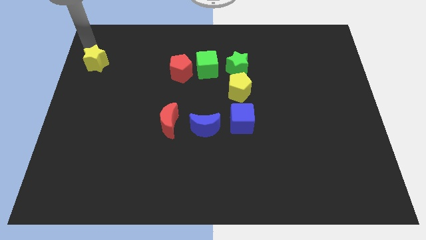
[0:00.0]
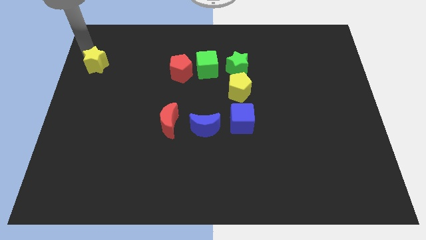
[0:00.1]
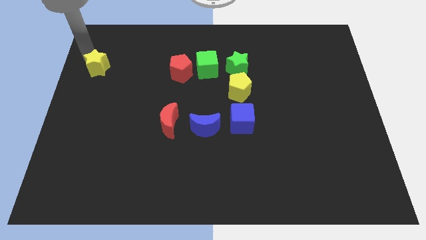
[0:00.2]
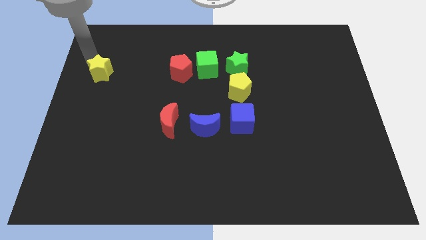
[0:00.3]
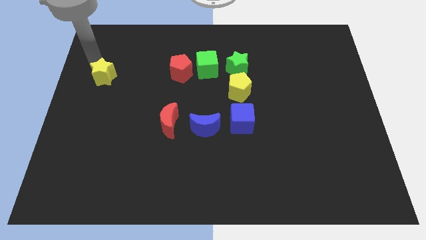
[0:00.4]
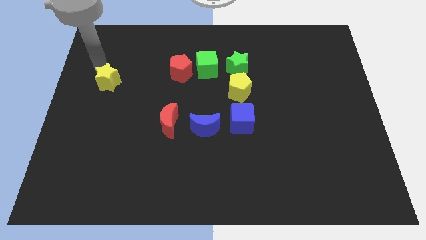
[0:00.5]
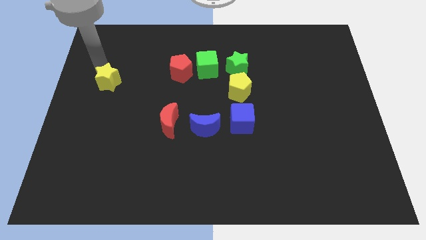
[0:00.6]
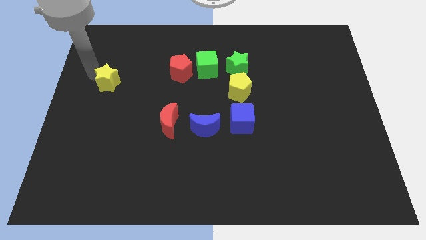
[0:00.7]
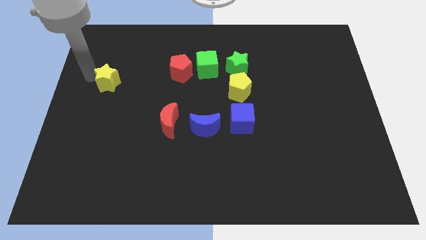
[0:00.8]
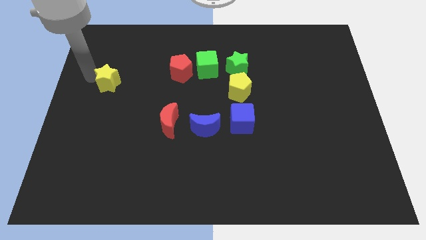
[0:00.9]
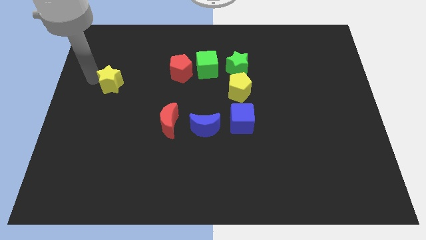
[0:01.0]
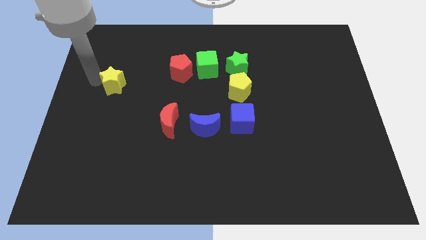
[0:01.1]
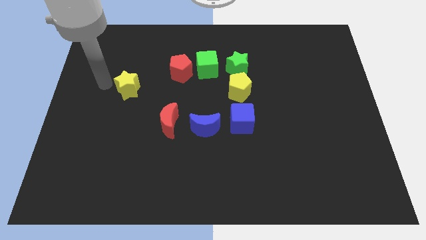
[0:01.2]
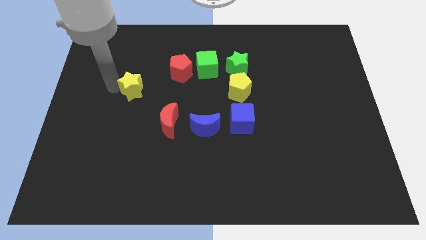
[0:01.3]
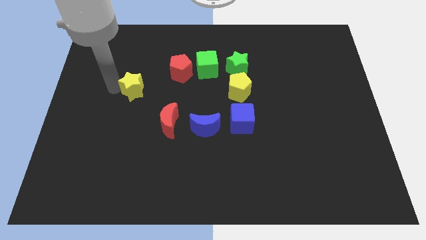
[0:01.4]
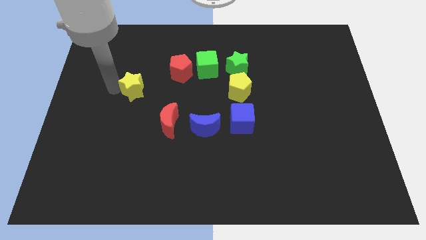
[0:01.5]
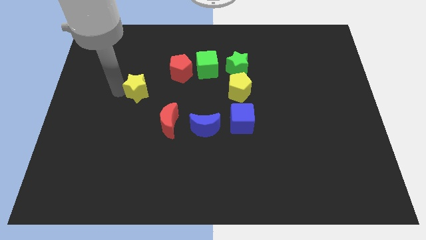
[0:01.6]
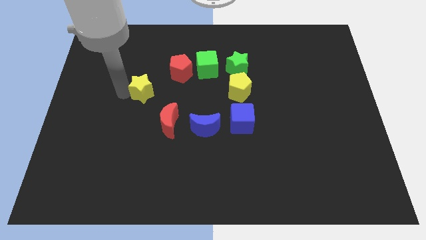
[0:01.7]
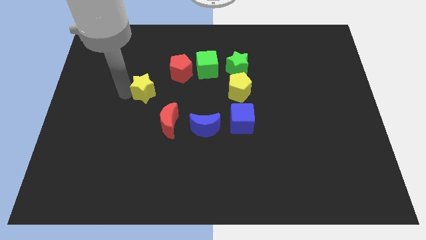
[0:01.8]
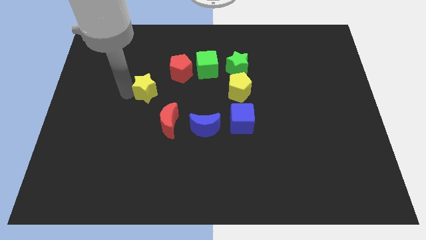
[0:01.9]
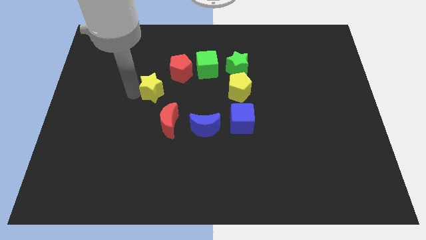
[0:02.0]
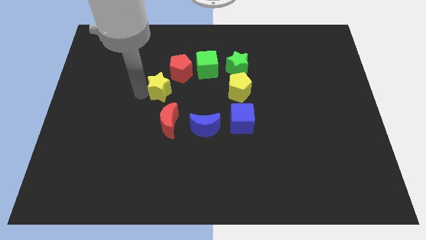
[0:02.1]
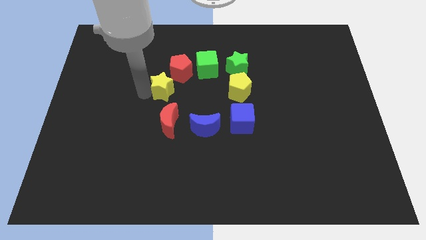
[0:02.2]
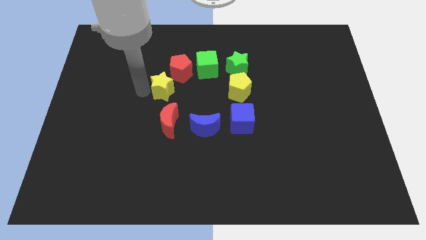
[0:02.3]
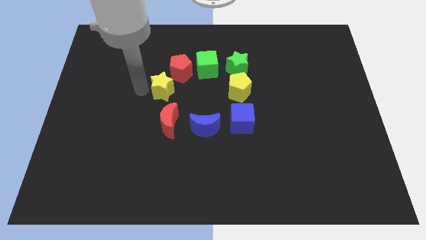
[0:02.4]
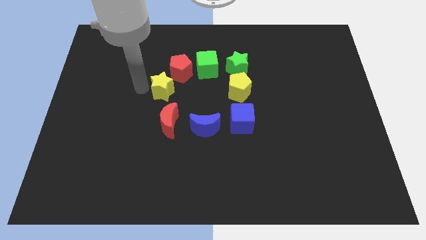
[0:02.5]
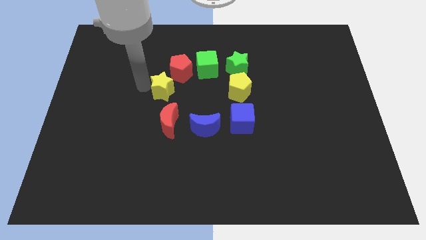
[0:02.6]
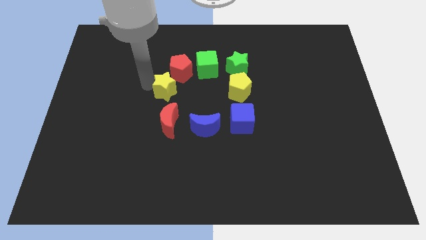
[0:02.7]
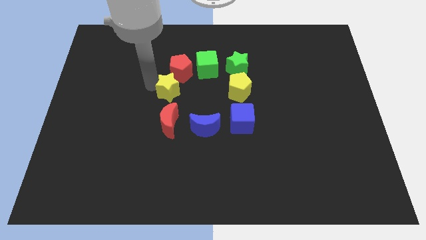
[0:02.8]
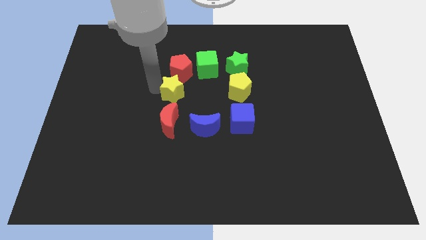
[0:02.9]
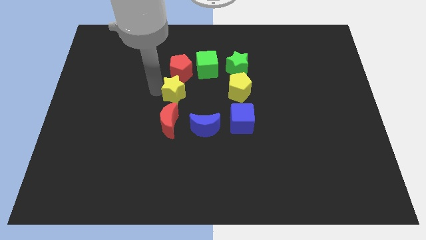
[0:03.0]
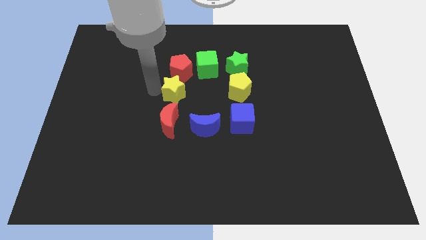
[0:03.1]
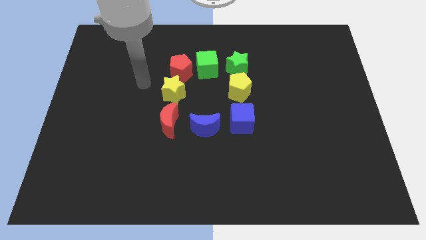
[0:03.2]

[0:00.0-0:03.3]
place the yellow star in between the red pentagon and red crescent

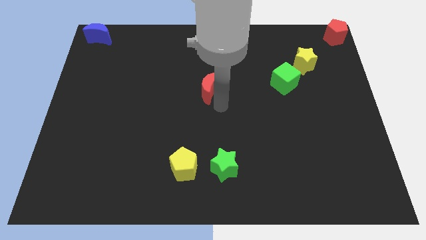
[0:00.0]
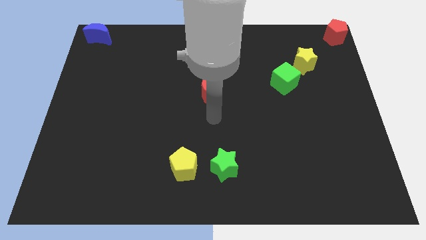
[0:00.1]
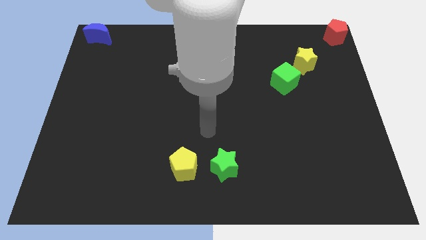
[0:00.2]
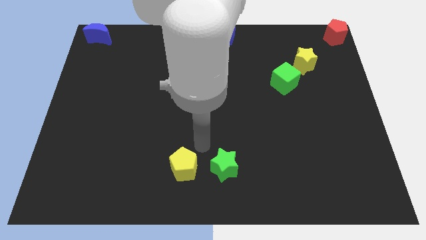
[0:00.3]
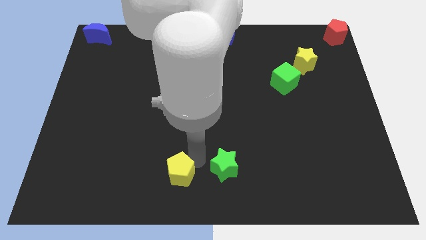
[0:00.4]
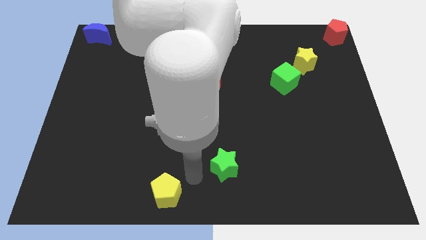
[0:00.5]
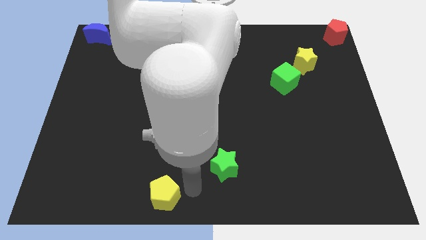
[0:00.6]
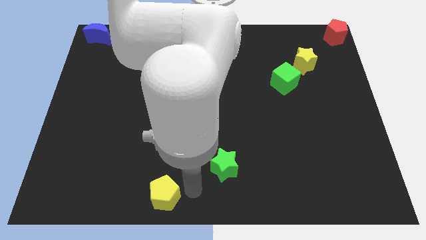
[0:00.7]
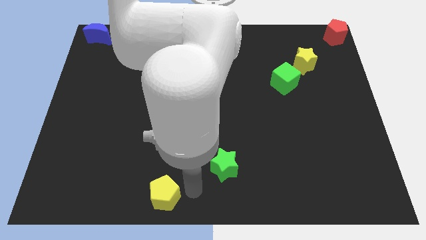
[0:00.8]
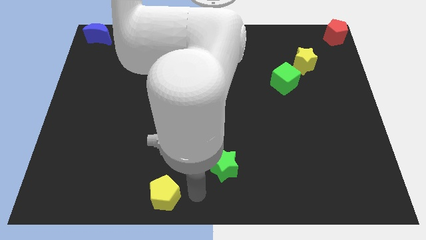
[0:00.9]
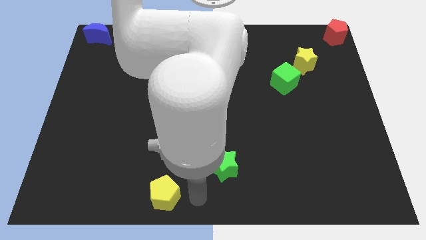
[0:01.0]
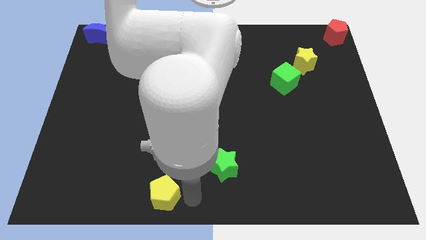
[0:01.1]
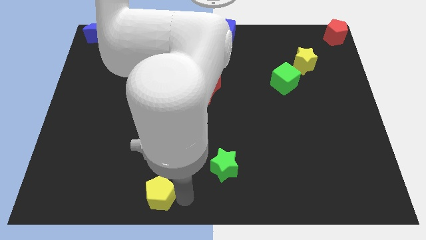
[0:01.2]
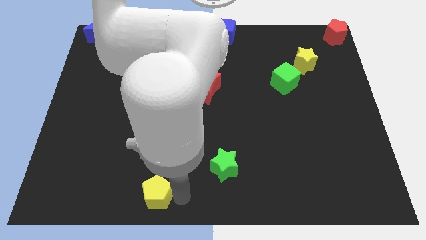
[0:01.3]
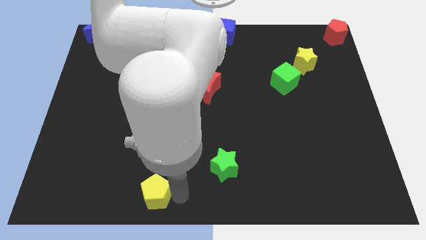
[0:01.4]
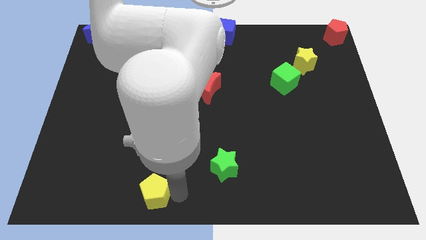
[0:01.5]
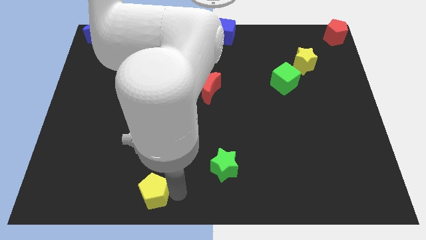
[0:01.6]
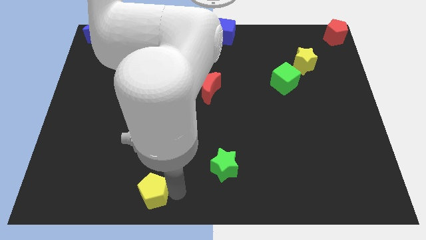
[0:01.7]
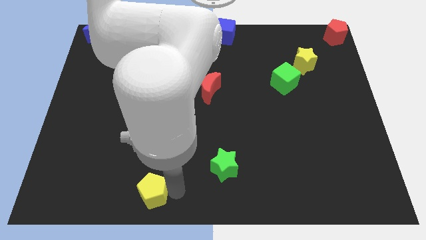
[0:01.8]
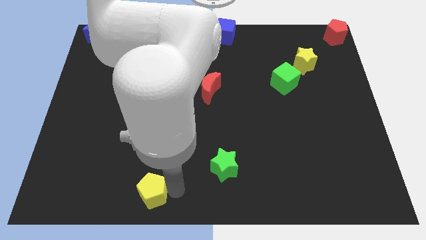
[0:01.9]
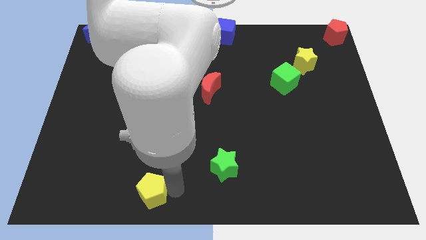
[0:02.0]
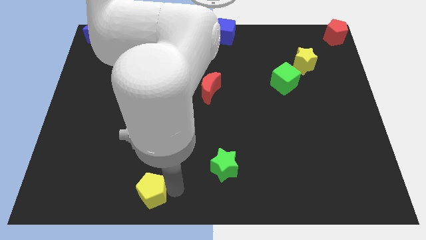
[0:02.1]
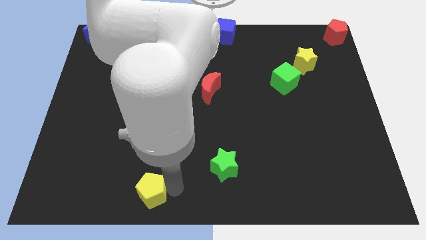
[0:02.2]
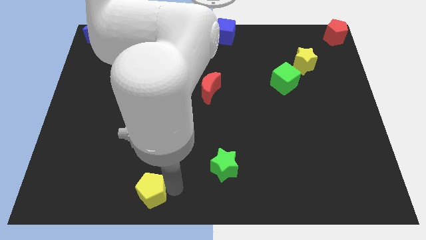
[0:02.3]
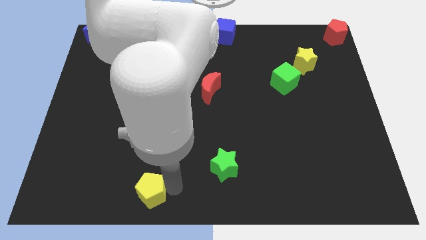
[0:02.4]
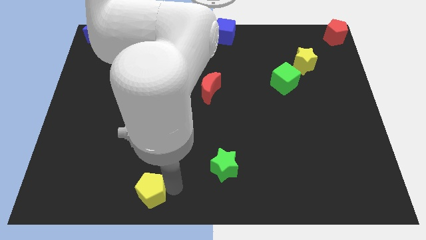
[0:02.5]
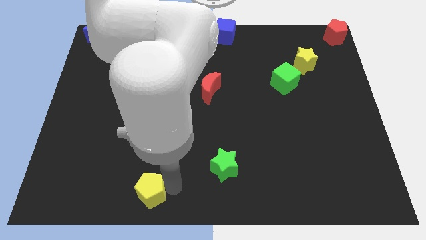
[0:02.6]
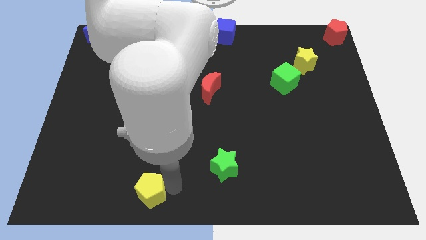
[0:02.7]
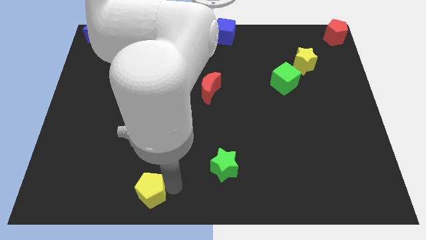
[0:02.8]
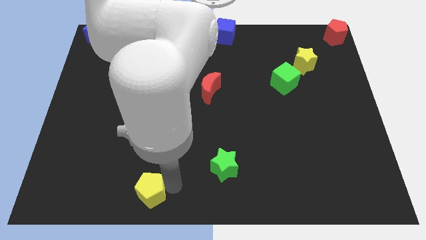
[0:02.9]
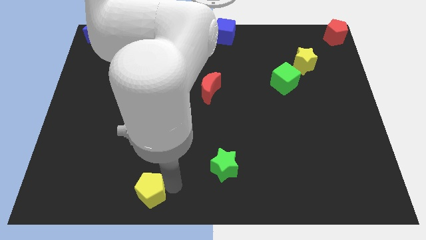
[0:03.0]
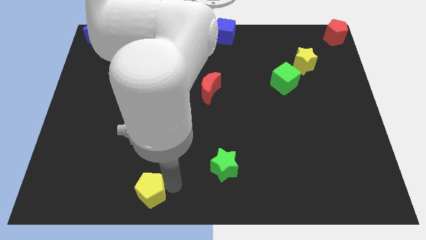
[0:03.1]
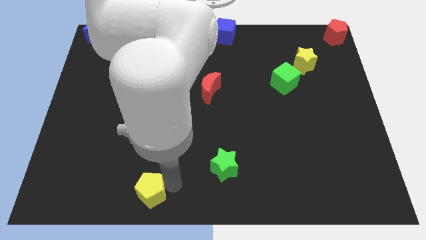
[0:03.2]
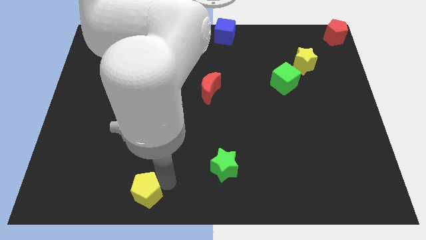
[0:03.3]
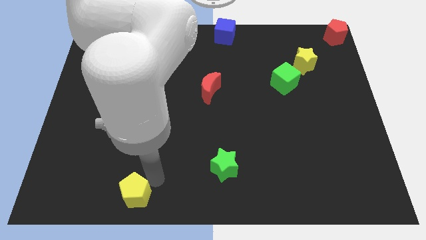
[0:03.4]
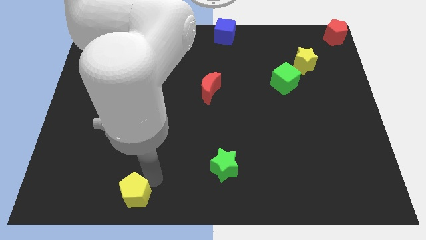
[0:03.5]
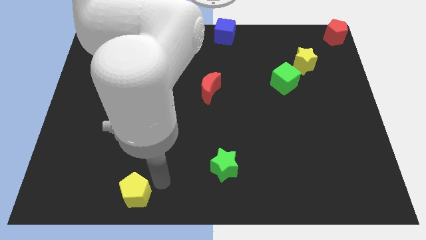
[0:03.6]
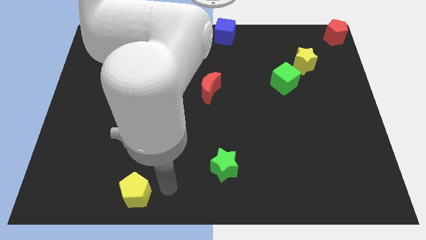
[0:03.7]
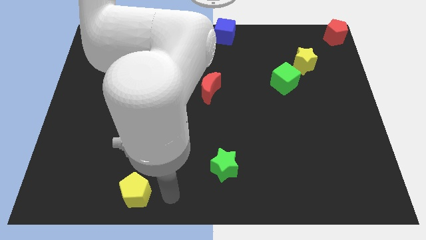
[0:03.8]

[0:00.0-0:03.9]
push the yellow pentagon downwards

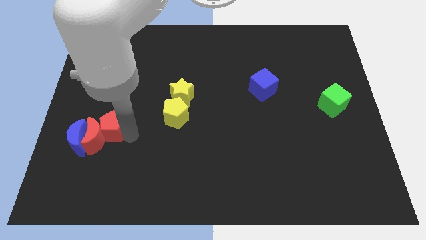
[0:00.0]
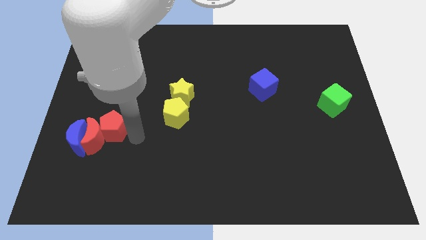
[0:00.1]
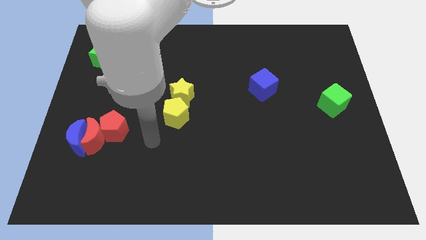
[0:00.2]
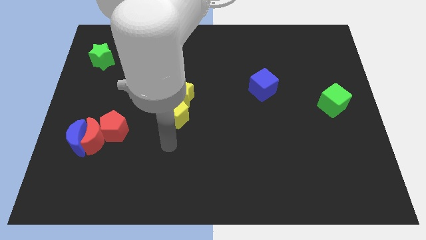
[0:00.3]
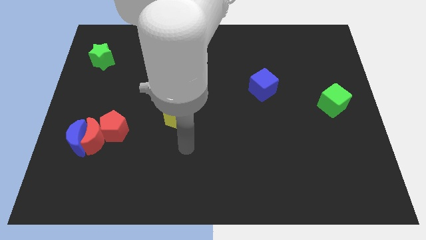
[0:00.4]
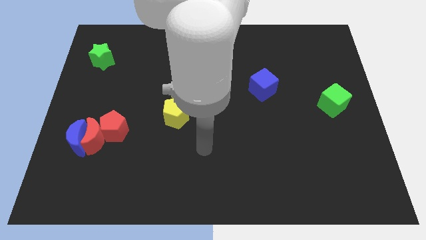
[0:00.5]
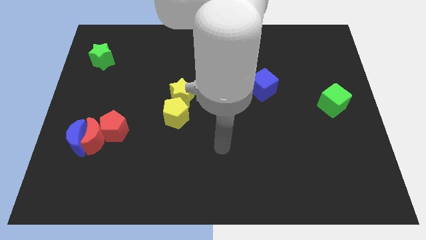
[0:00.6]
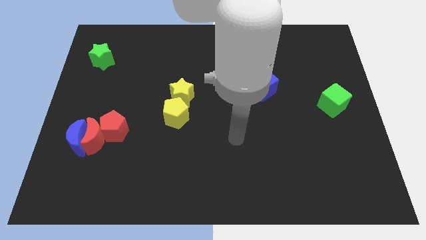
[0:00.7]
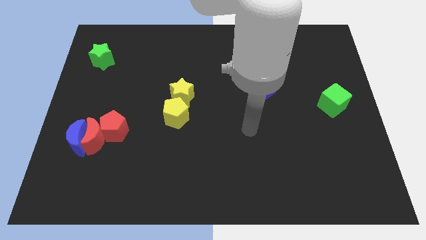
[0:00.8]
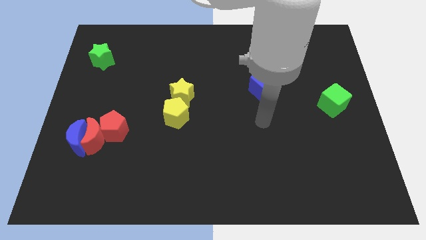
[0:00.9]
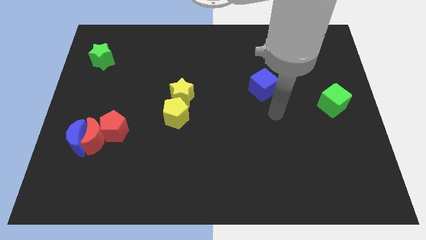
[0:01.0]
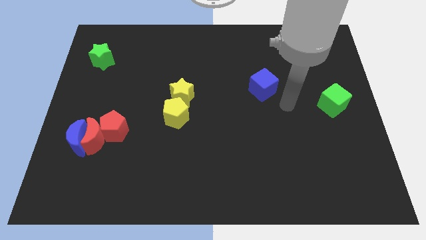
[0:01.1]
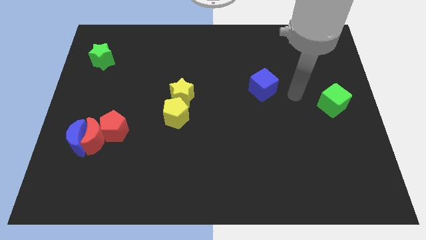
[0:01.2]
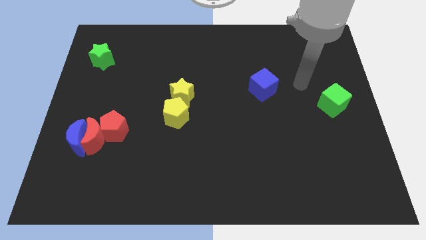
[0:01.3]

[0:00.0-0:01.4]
move your arm away from red pentagon

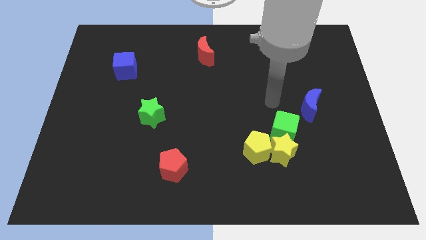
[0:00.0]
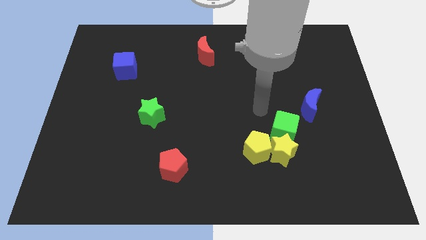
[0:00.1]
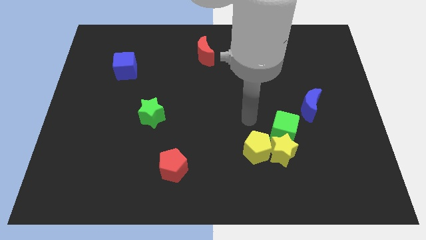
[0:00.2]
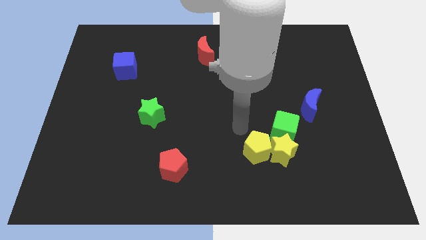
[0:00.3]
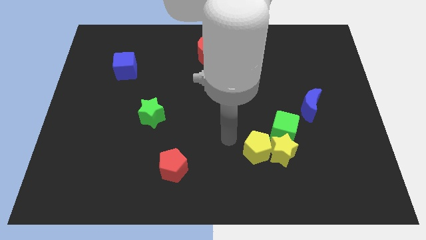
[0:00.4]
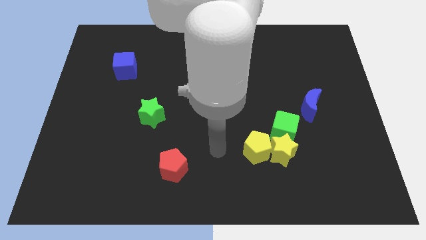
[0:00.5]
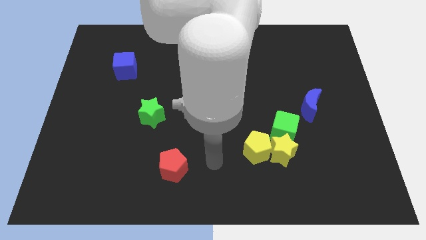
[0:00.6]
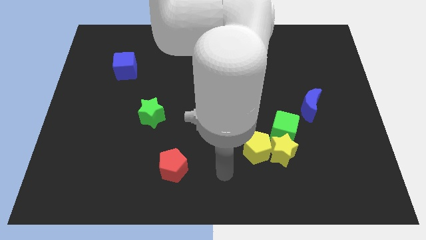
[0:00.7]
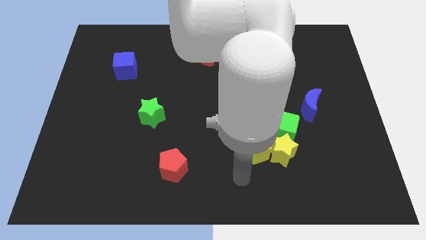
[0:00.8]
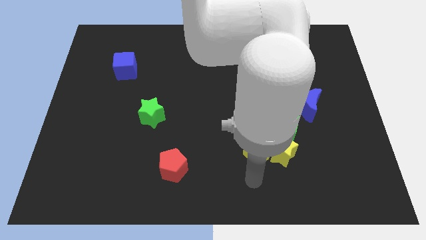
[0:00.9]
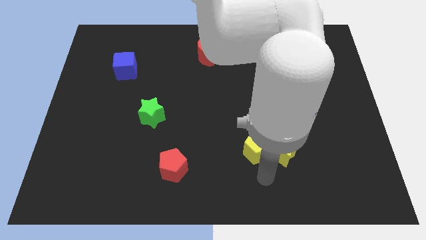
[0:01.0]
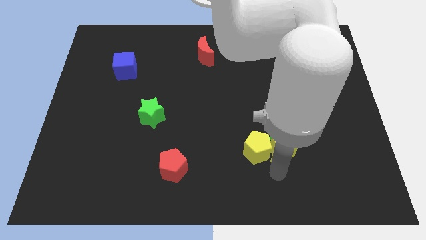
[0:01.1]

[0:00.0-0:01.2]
place your hand below the group of yellow blocks
